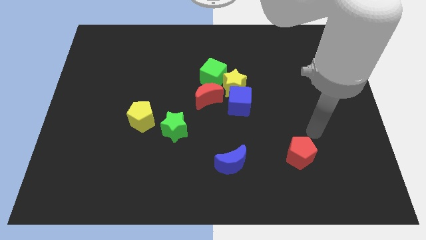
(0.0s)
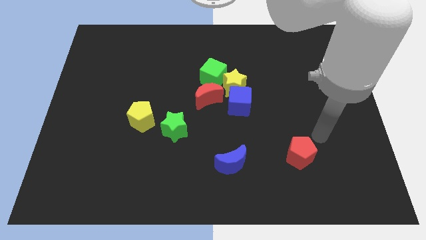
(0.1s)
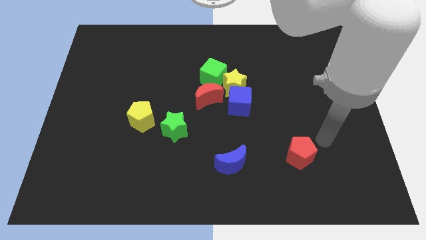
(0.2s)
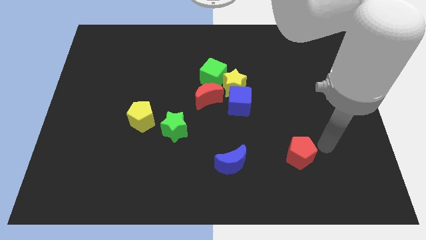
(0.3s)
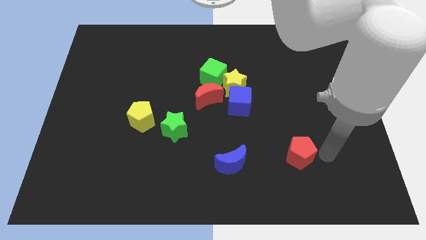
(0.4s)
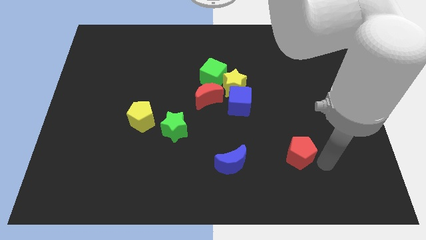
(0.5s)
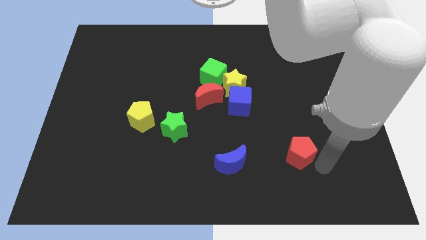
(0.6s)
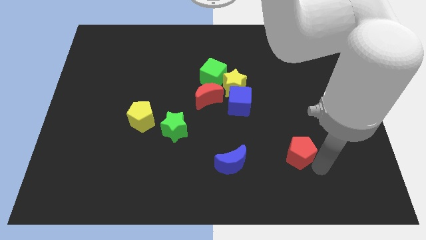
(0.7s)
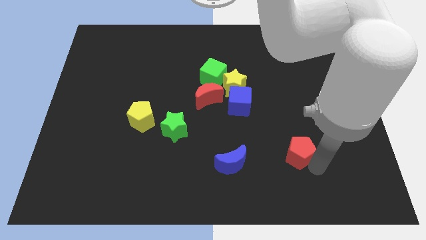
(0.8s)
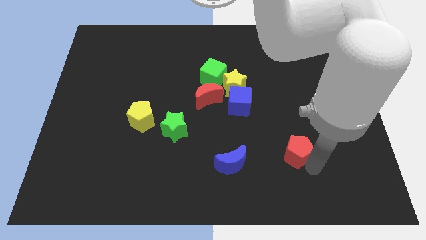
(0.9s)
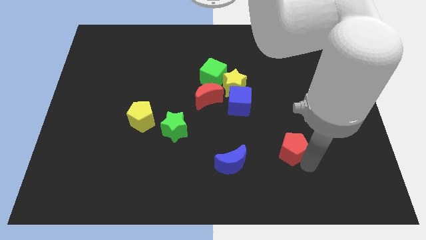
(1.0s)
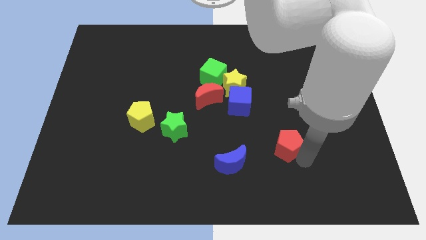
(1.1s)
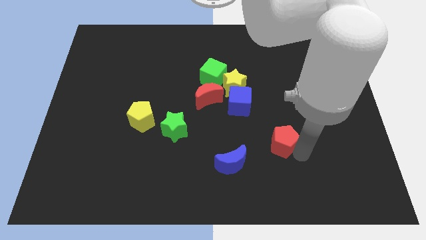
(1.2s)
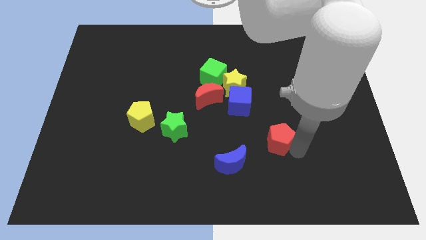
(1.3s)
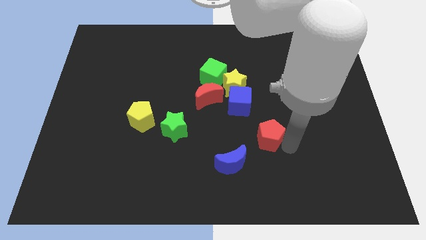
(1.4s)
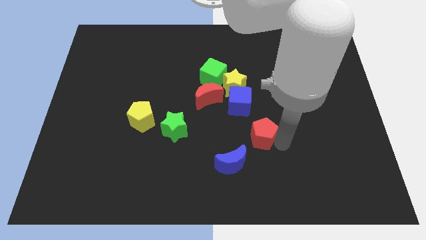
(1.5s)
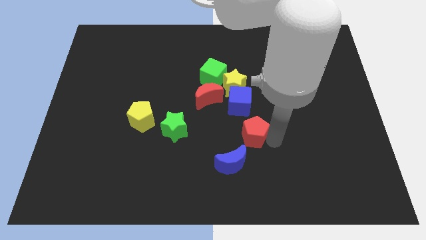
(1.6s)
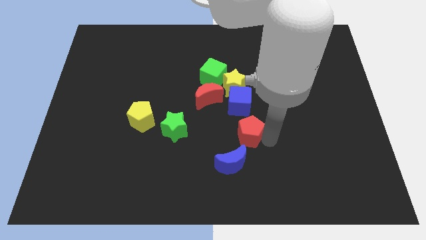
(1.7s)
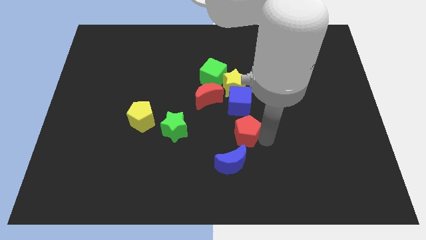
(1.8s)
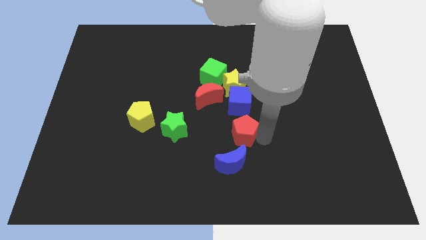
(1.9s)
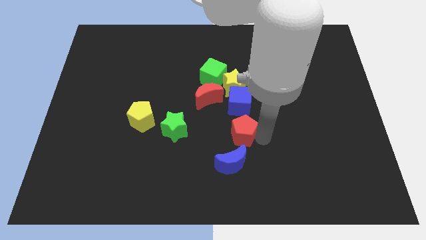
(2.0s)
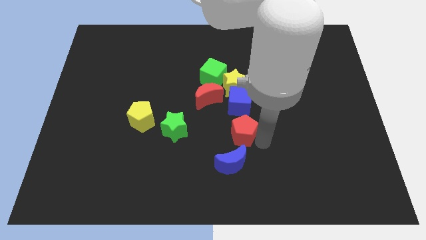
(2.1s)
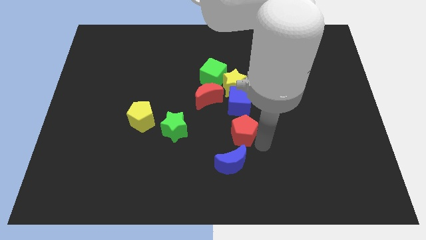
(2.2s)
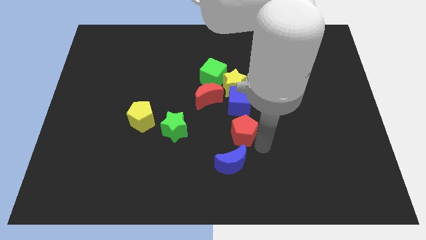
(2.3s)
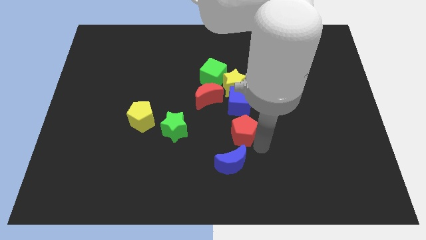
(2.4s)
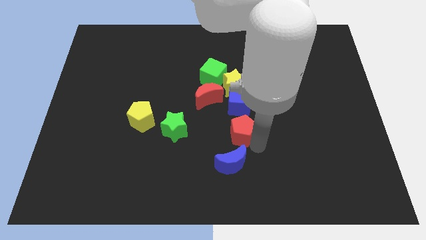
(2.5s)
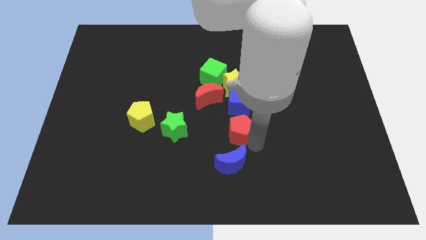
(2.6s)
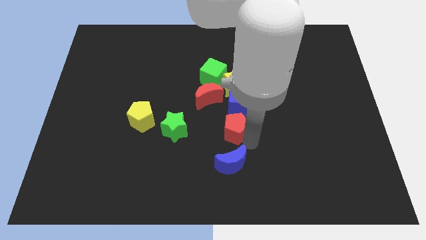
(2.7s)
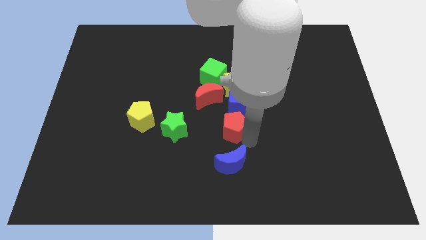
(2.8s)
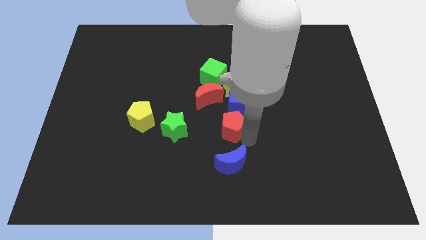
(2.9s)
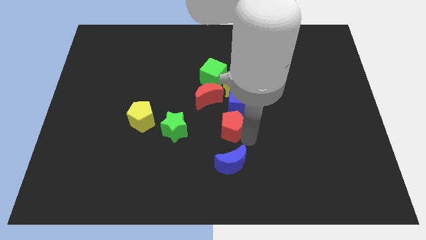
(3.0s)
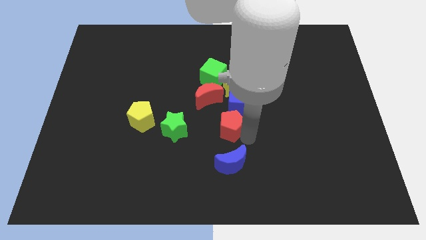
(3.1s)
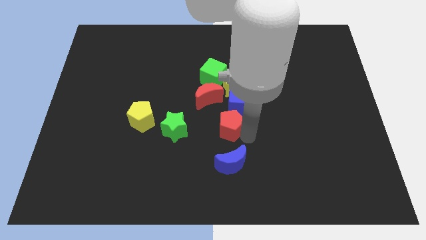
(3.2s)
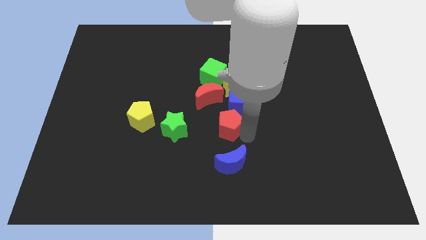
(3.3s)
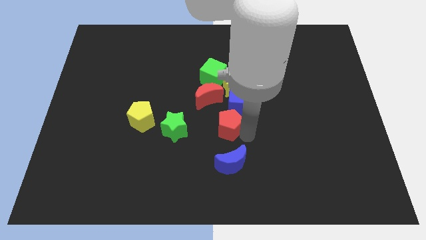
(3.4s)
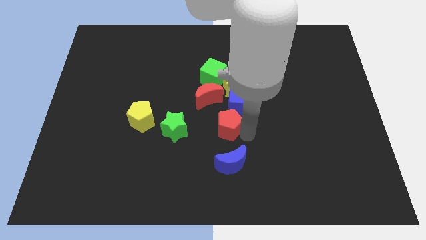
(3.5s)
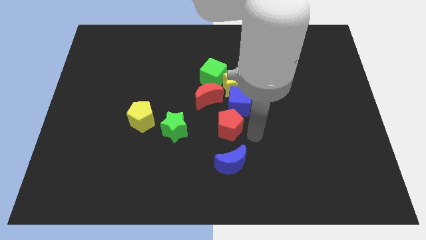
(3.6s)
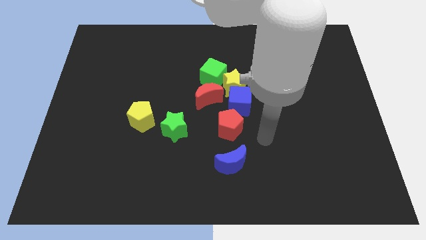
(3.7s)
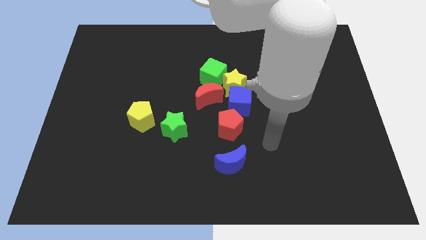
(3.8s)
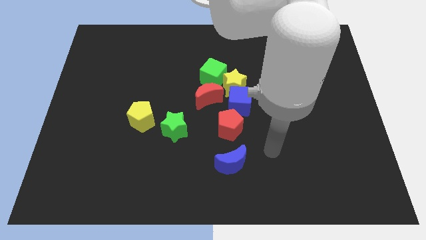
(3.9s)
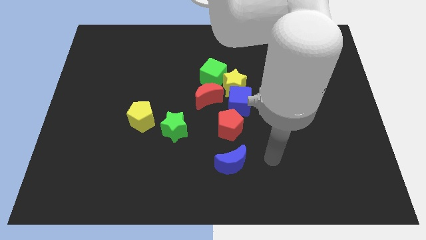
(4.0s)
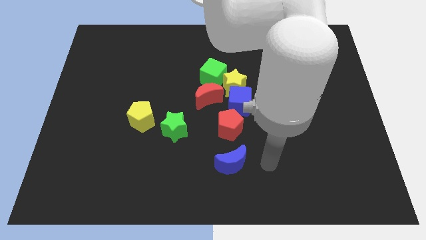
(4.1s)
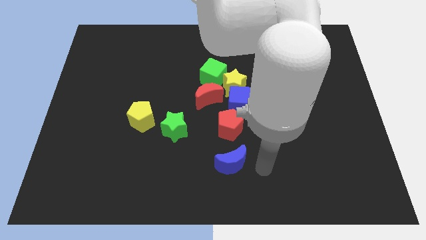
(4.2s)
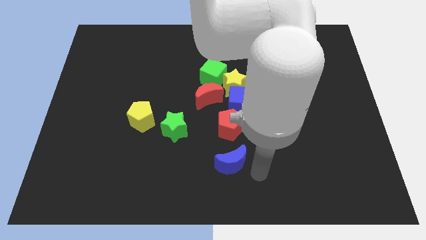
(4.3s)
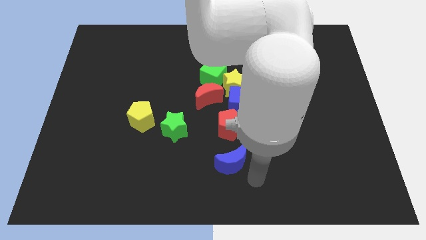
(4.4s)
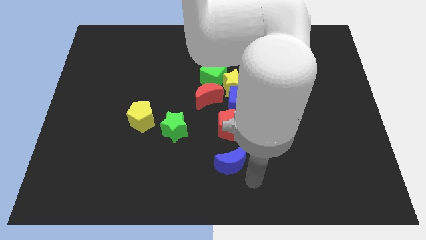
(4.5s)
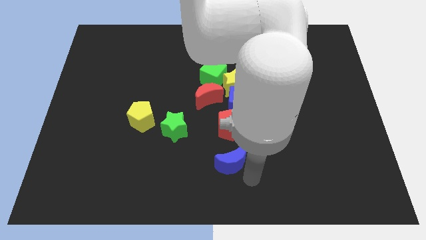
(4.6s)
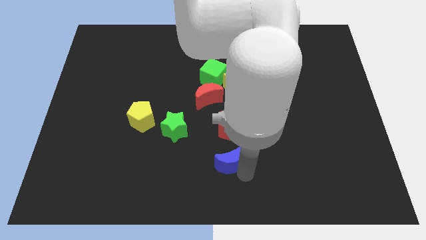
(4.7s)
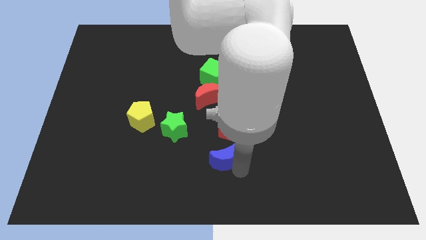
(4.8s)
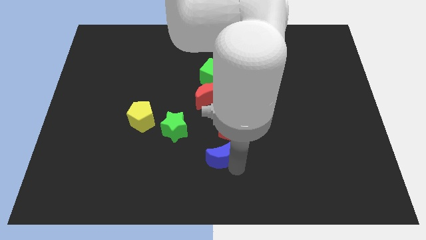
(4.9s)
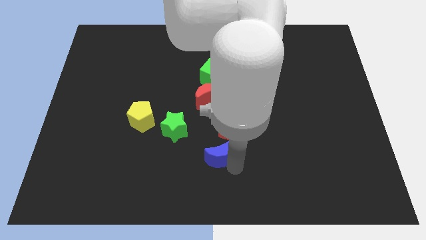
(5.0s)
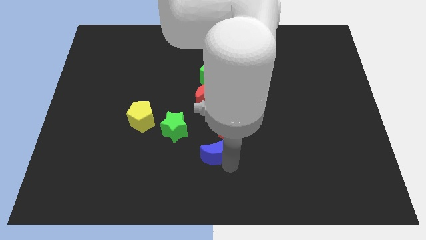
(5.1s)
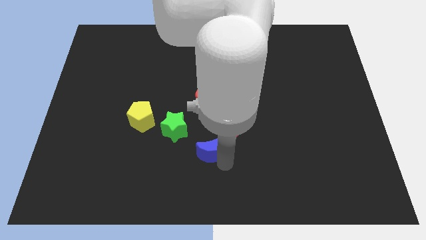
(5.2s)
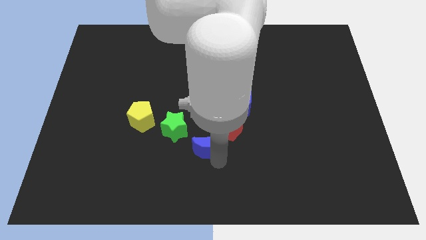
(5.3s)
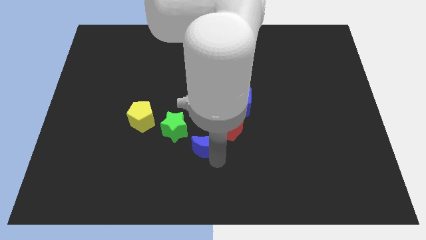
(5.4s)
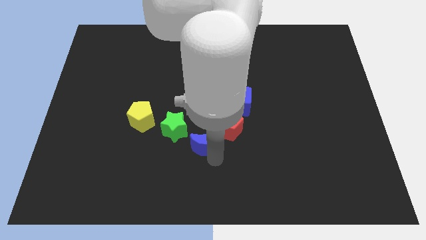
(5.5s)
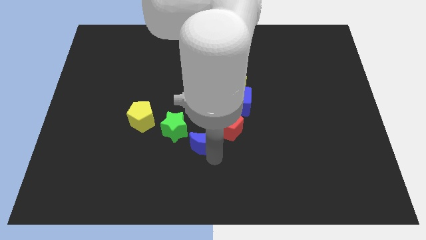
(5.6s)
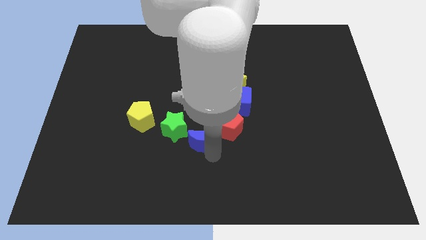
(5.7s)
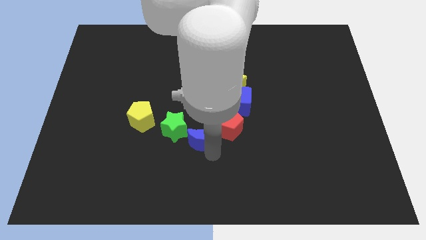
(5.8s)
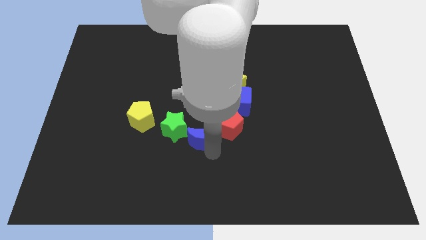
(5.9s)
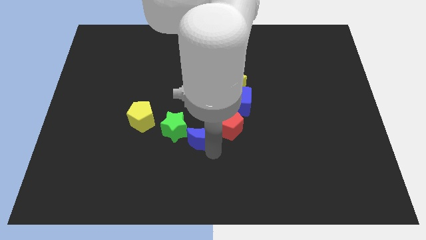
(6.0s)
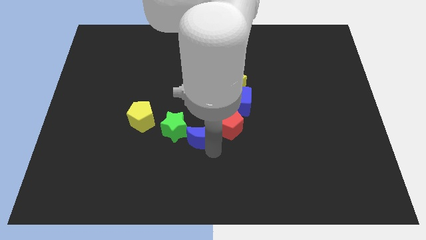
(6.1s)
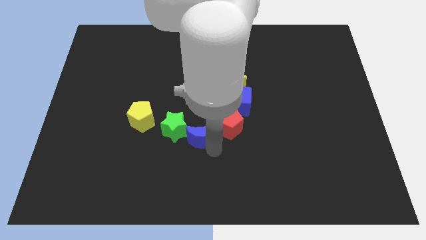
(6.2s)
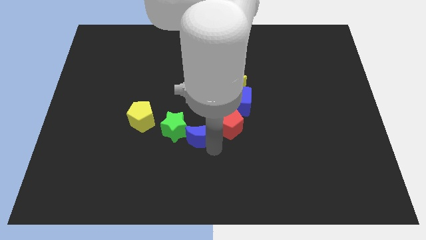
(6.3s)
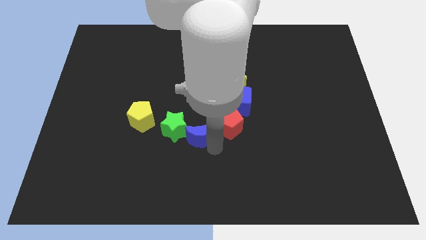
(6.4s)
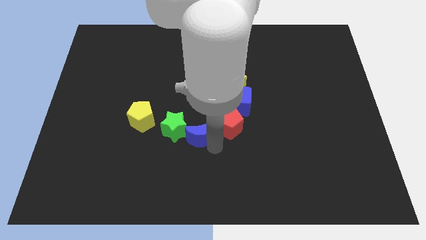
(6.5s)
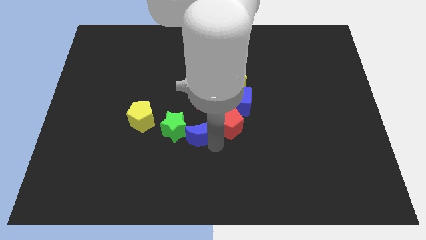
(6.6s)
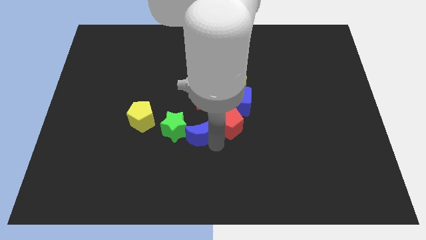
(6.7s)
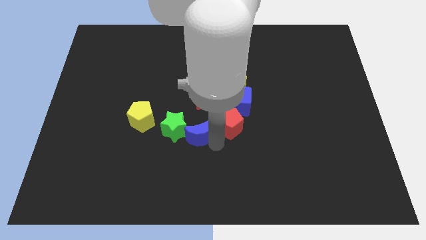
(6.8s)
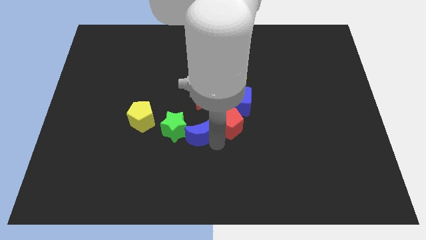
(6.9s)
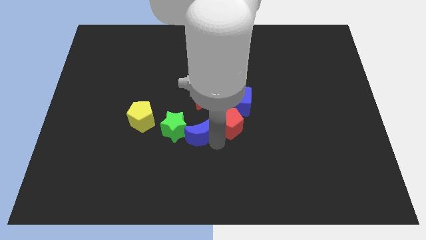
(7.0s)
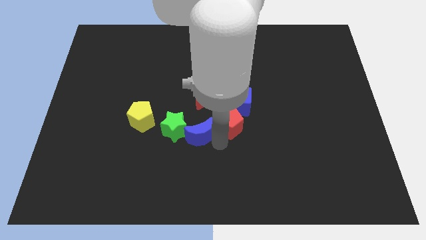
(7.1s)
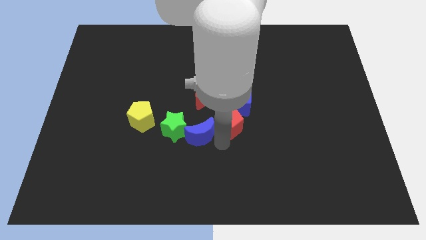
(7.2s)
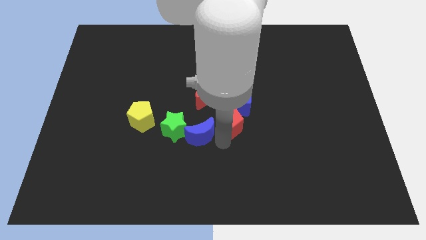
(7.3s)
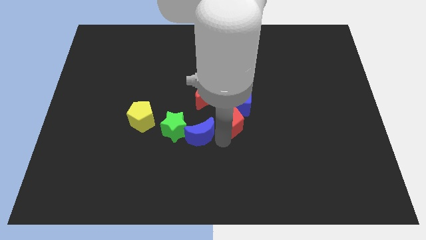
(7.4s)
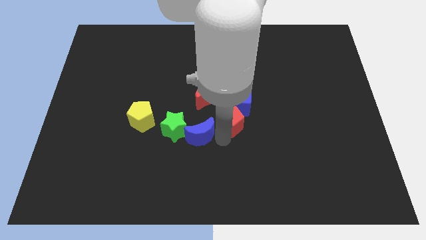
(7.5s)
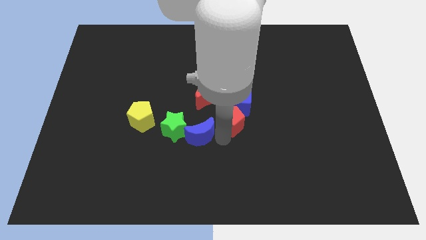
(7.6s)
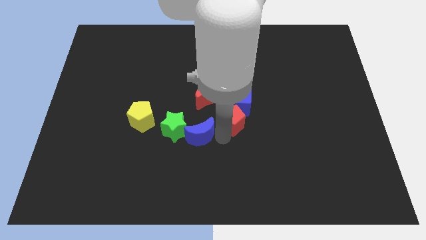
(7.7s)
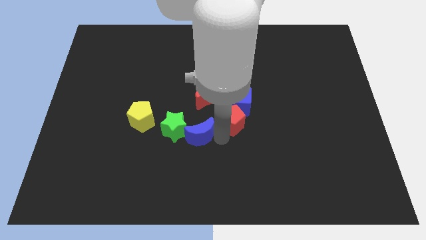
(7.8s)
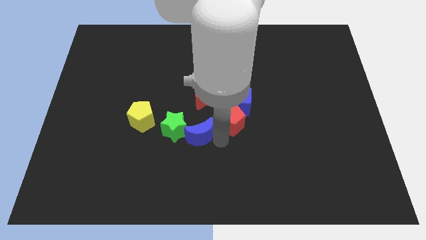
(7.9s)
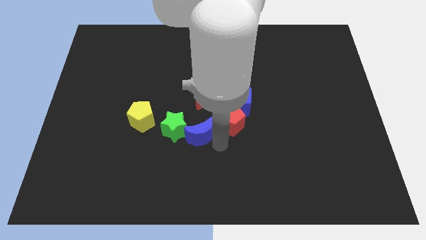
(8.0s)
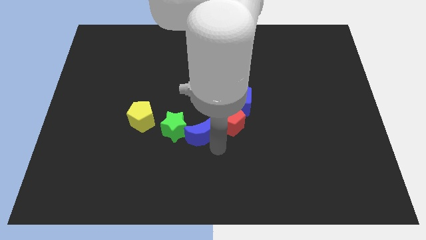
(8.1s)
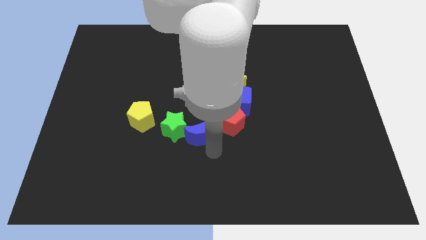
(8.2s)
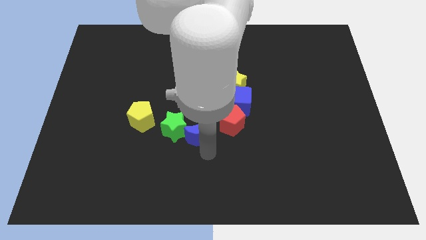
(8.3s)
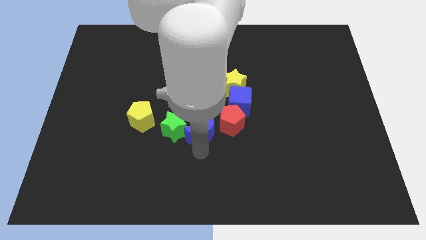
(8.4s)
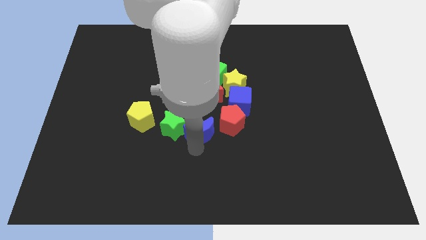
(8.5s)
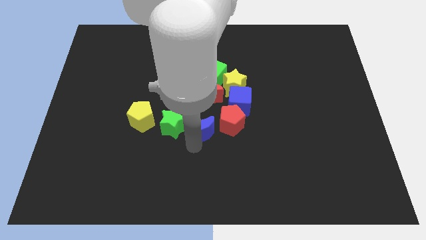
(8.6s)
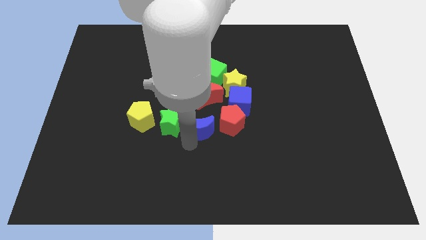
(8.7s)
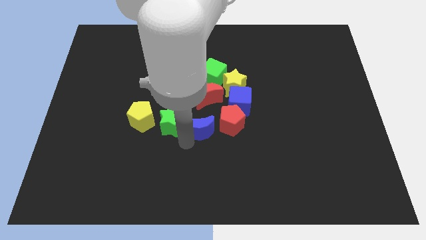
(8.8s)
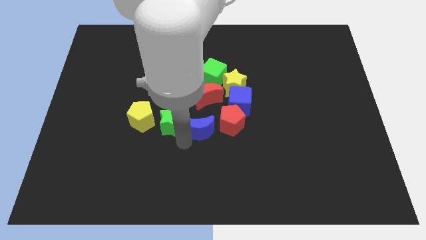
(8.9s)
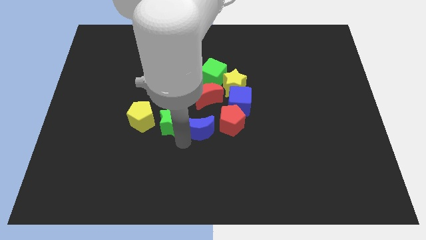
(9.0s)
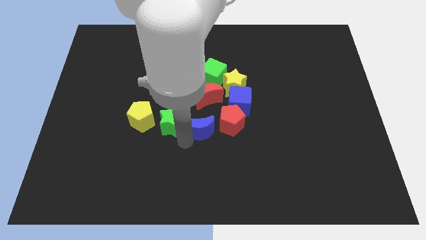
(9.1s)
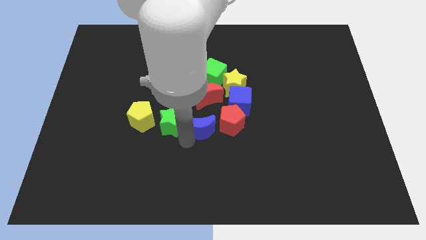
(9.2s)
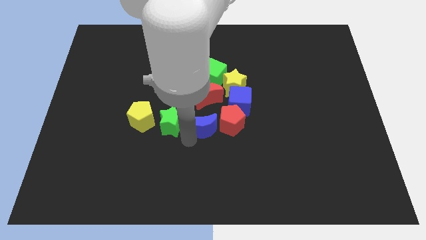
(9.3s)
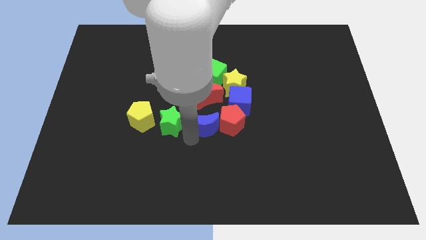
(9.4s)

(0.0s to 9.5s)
move the group of blocks to the center of the board
